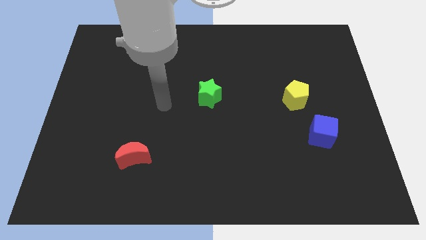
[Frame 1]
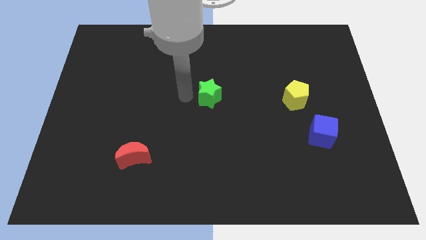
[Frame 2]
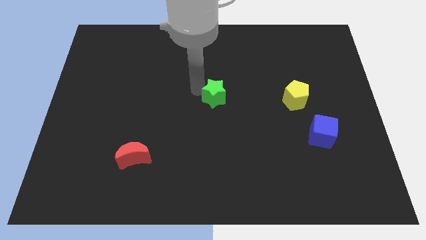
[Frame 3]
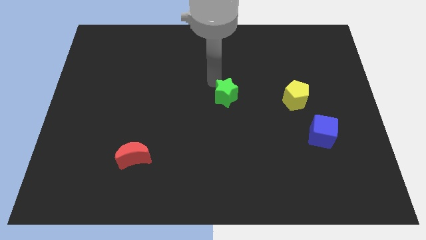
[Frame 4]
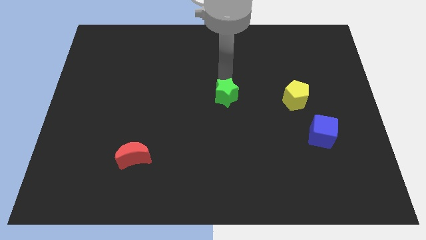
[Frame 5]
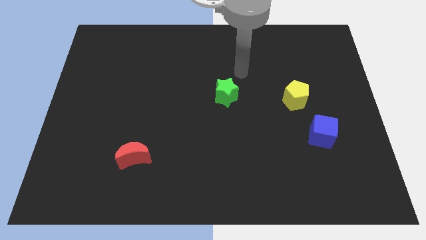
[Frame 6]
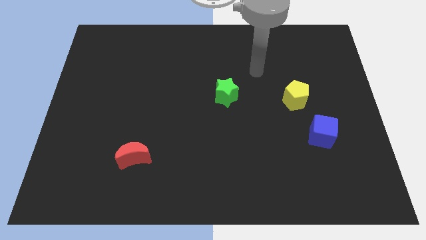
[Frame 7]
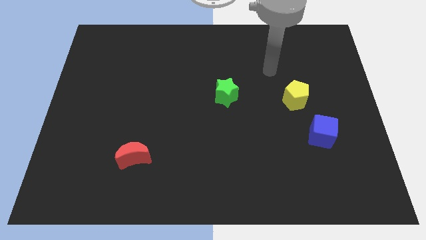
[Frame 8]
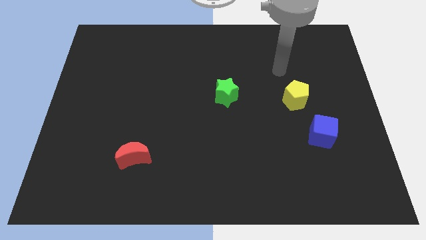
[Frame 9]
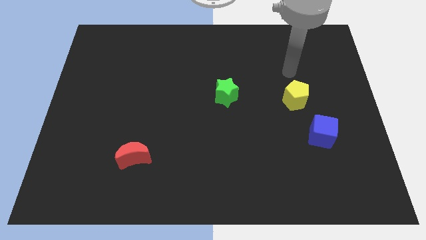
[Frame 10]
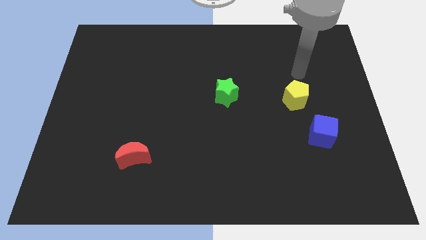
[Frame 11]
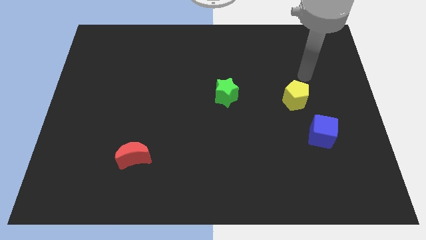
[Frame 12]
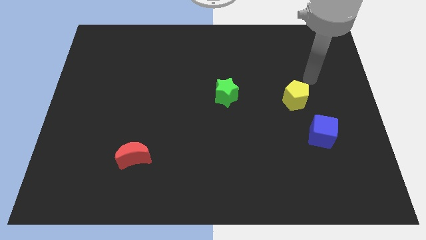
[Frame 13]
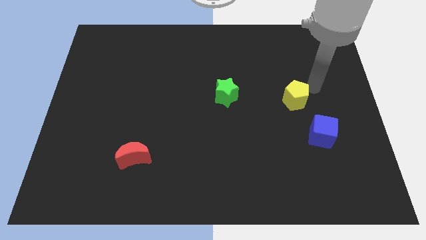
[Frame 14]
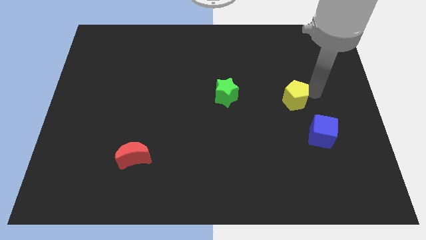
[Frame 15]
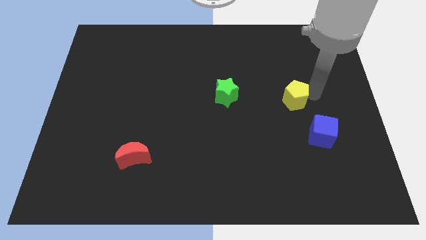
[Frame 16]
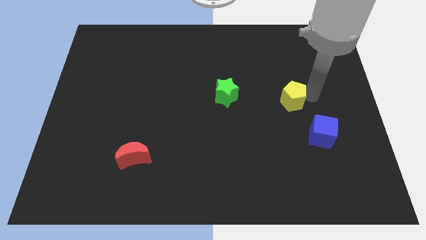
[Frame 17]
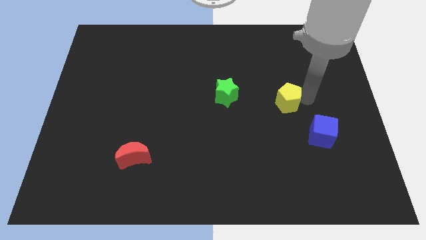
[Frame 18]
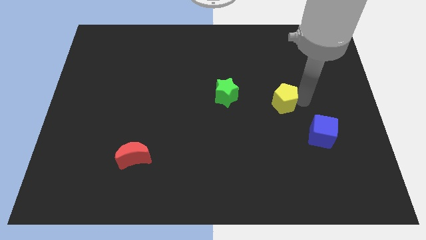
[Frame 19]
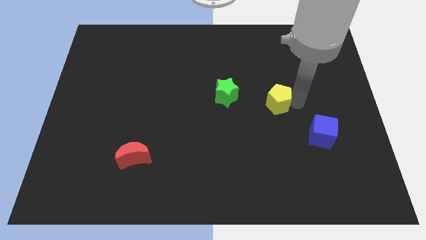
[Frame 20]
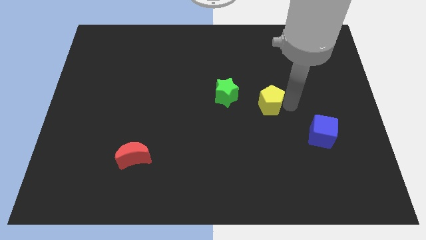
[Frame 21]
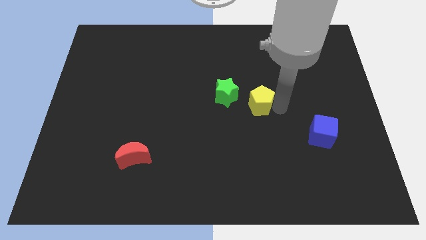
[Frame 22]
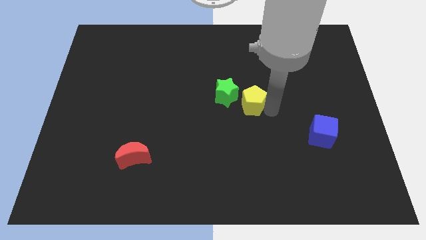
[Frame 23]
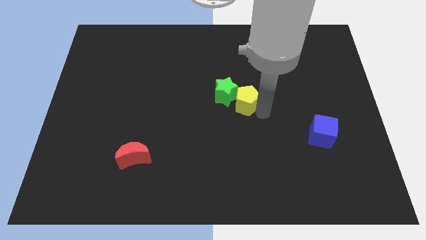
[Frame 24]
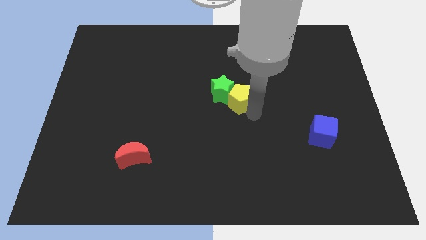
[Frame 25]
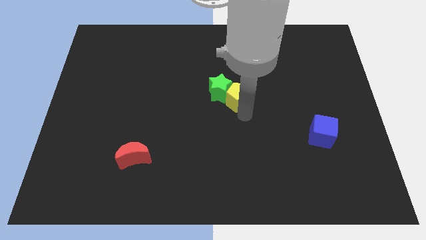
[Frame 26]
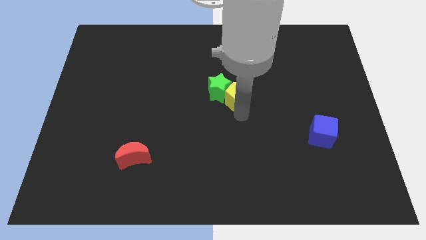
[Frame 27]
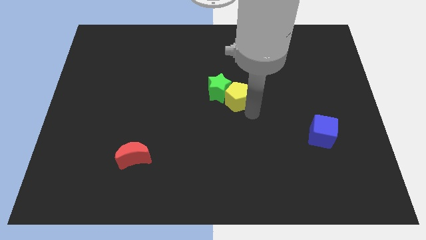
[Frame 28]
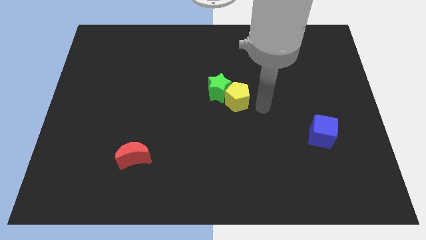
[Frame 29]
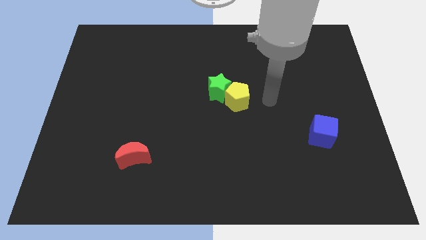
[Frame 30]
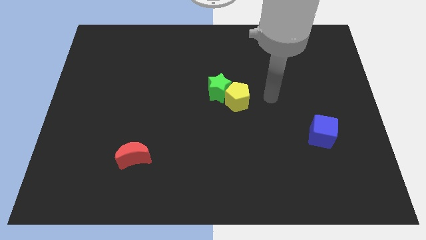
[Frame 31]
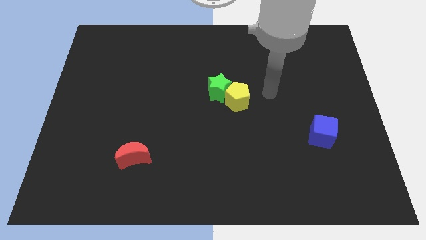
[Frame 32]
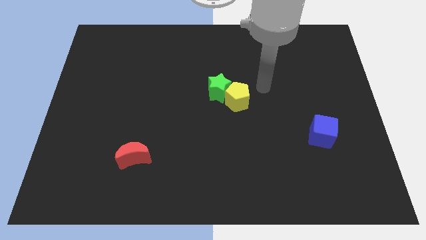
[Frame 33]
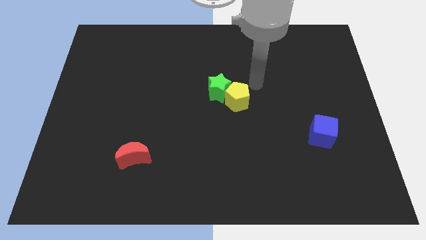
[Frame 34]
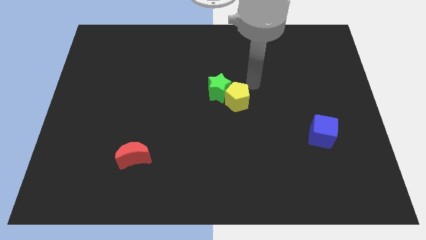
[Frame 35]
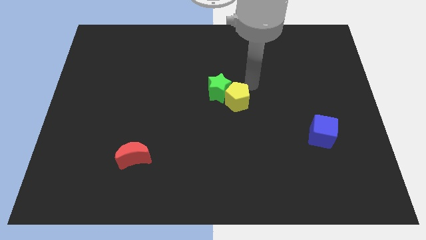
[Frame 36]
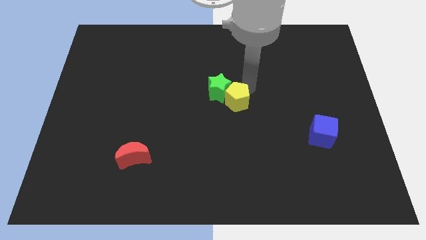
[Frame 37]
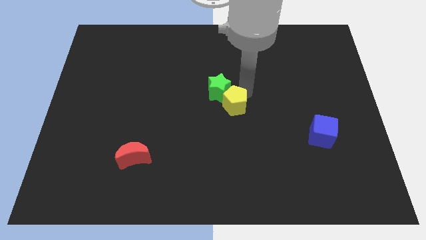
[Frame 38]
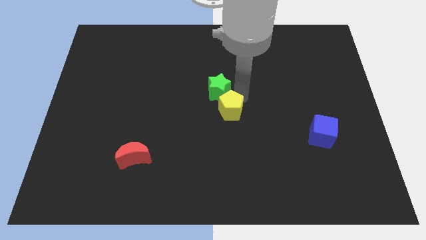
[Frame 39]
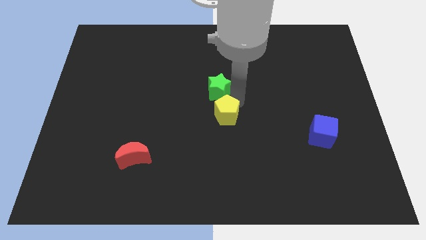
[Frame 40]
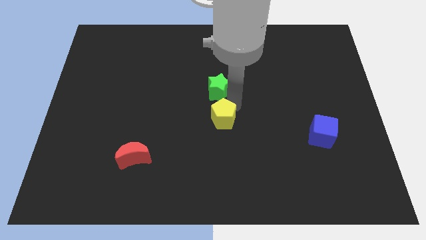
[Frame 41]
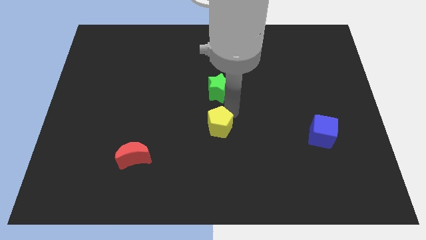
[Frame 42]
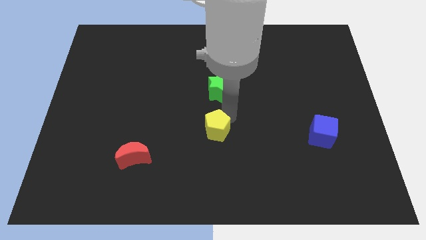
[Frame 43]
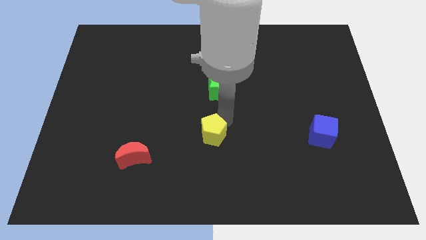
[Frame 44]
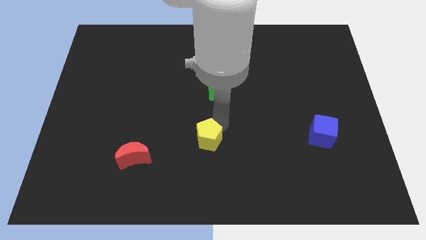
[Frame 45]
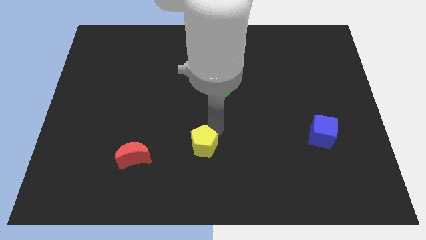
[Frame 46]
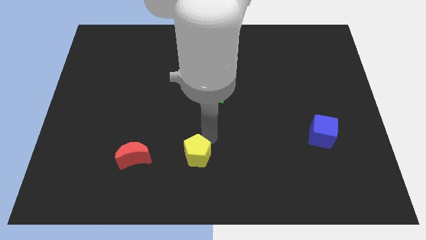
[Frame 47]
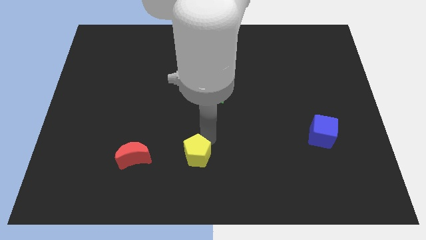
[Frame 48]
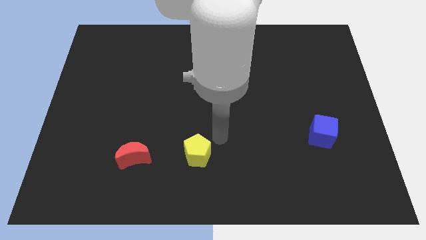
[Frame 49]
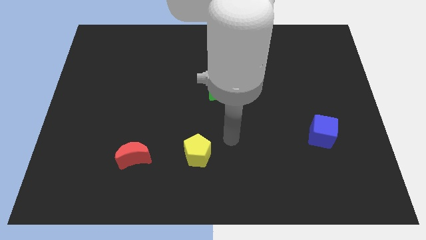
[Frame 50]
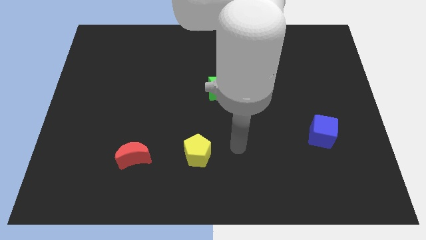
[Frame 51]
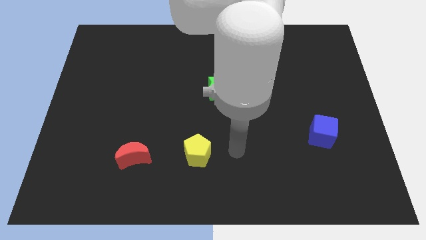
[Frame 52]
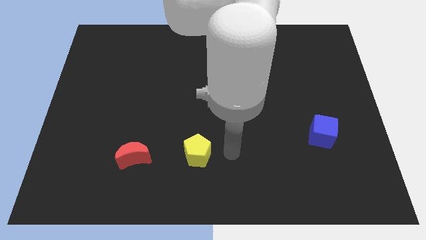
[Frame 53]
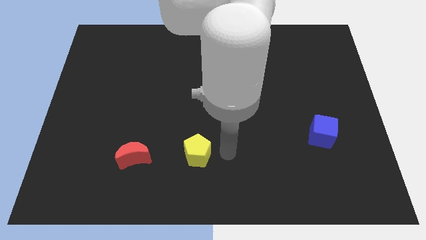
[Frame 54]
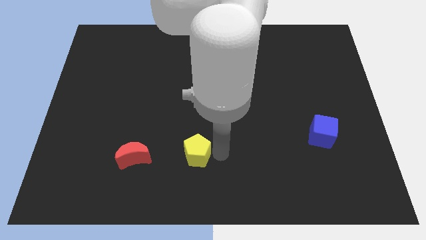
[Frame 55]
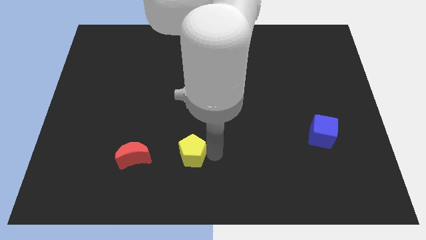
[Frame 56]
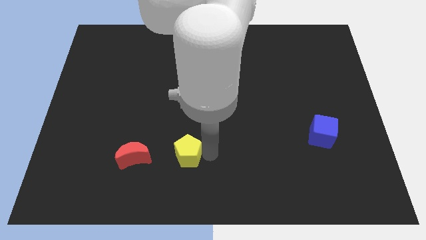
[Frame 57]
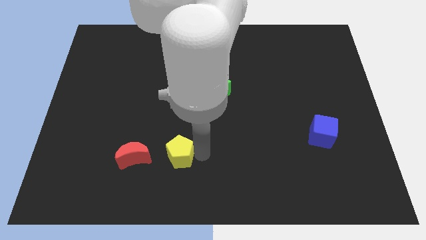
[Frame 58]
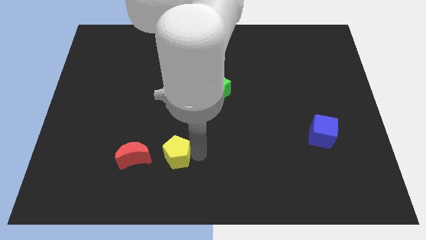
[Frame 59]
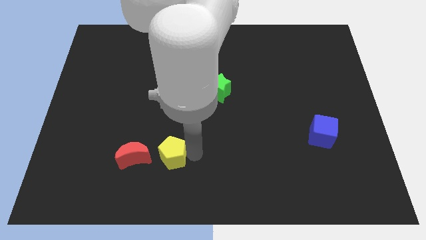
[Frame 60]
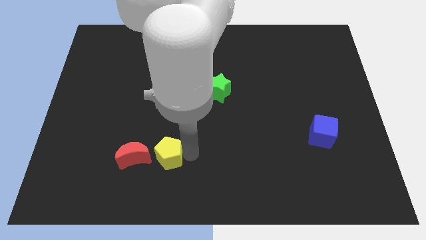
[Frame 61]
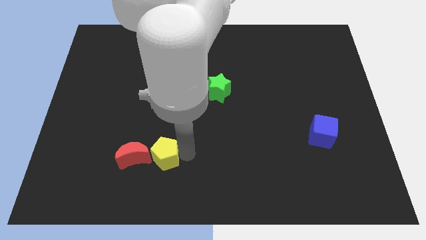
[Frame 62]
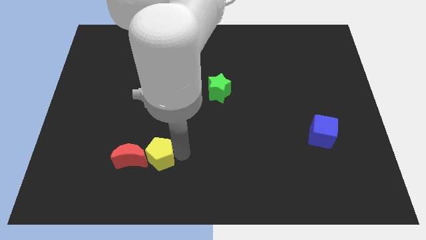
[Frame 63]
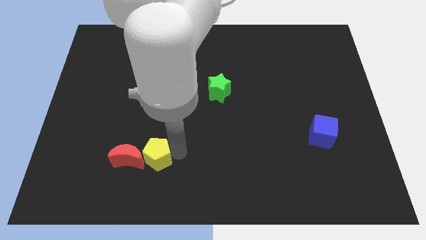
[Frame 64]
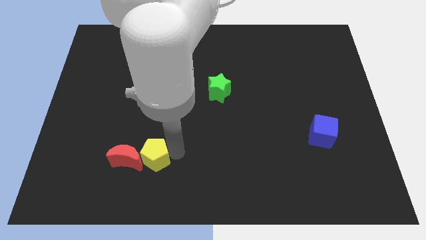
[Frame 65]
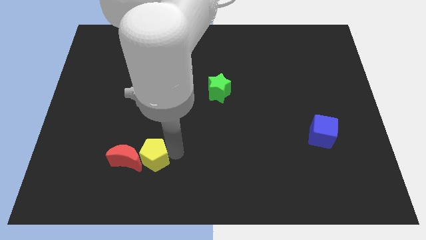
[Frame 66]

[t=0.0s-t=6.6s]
move the yellow block next to the moon

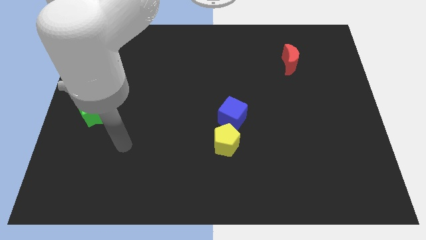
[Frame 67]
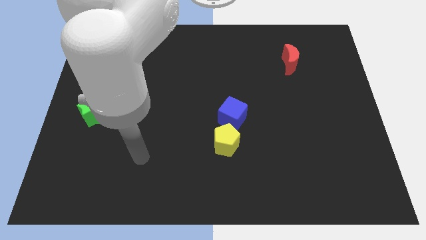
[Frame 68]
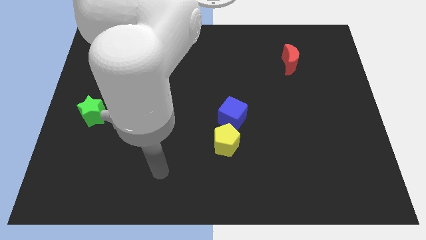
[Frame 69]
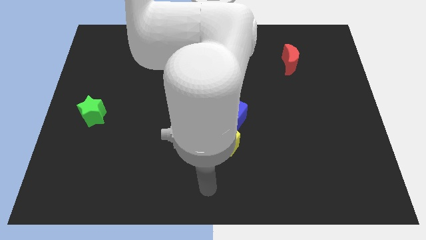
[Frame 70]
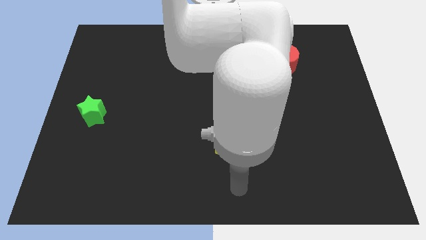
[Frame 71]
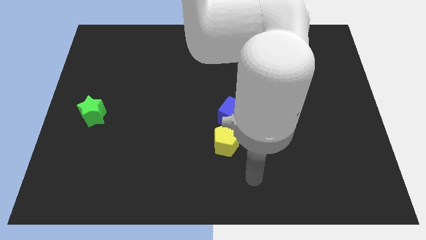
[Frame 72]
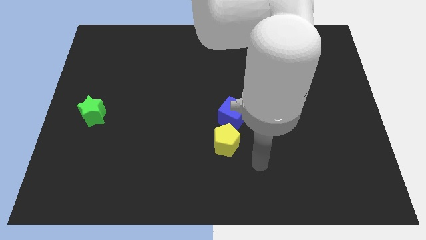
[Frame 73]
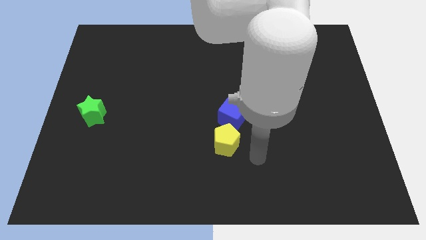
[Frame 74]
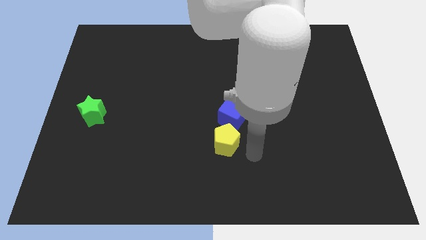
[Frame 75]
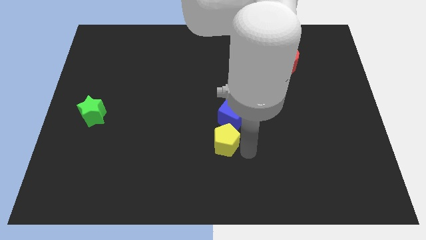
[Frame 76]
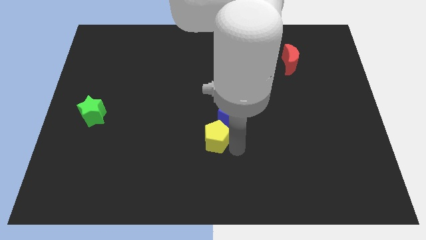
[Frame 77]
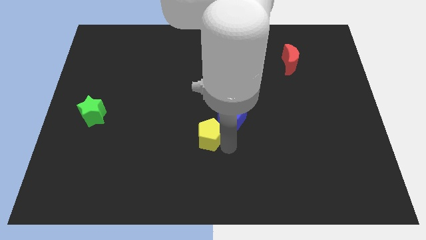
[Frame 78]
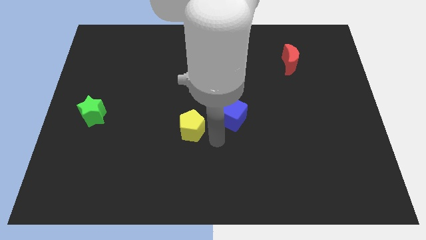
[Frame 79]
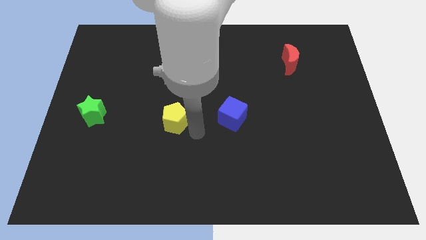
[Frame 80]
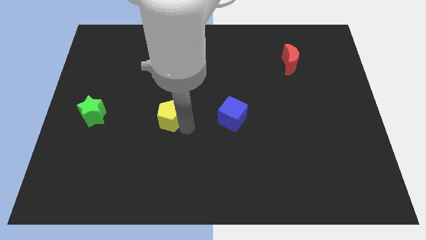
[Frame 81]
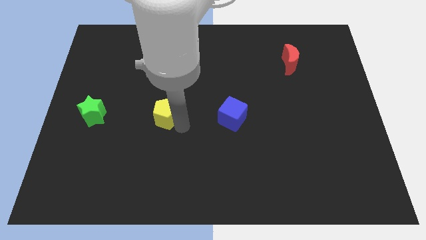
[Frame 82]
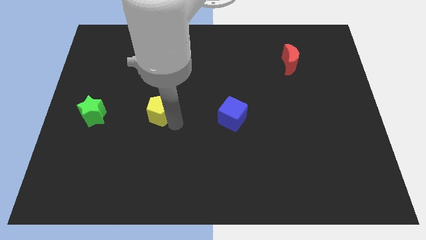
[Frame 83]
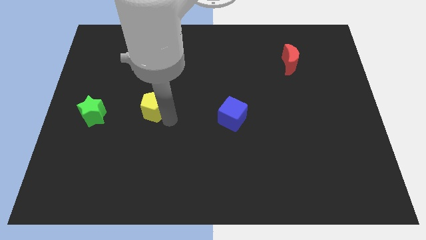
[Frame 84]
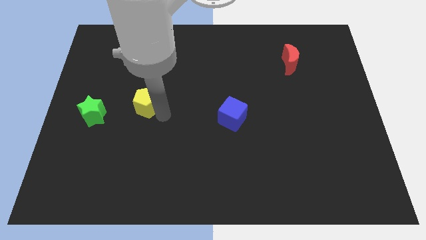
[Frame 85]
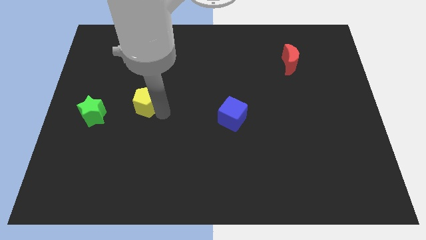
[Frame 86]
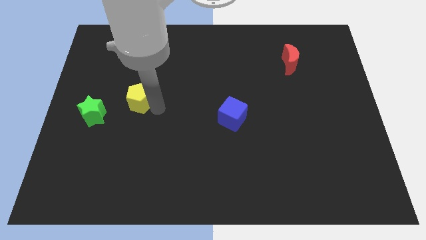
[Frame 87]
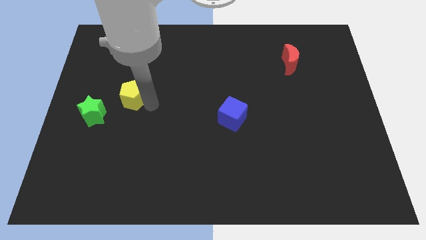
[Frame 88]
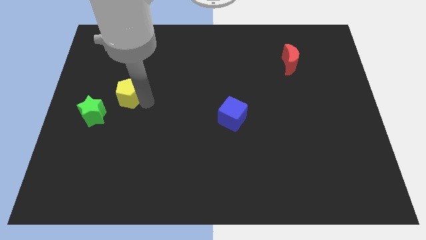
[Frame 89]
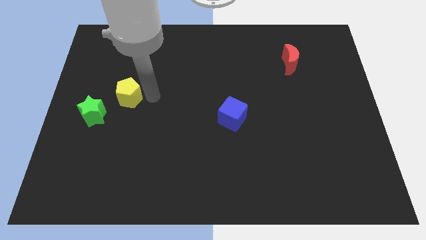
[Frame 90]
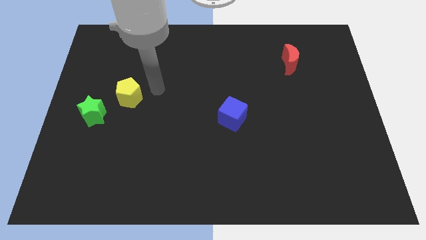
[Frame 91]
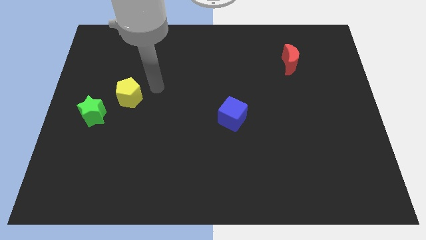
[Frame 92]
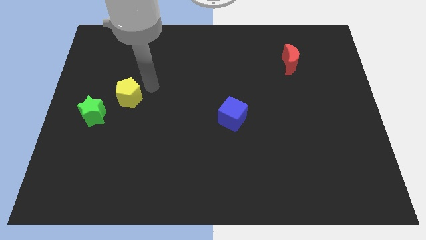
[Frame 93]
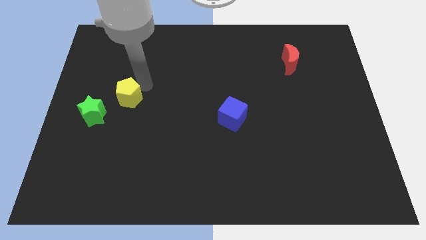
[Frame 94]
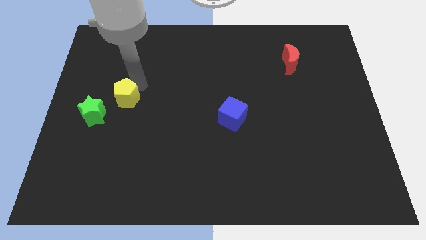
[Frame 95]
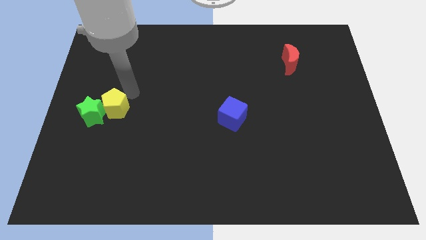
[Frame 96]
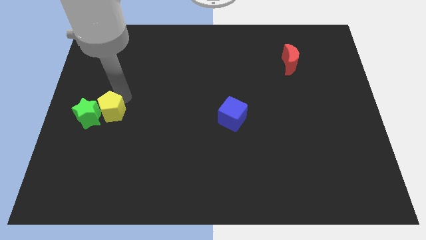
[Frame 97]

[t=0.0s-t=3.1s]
push the pentagon towards the green star
